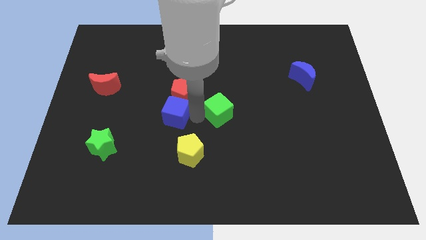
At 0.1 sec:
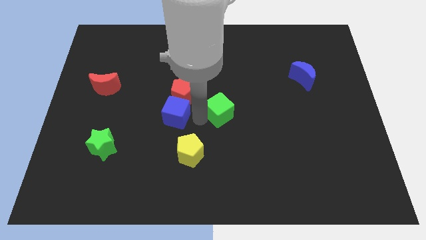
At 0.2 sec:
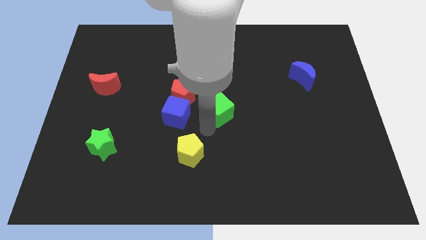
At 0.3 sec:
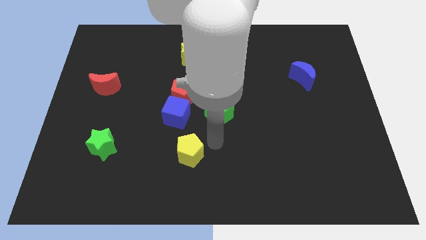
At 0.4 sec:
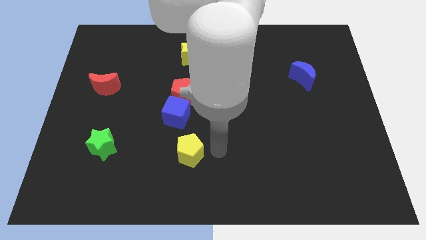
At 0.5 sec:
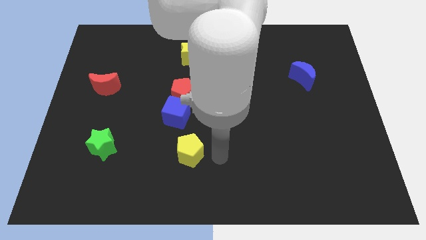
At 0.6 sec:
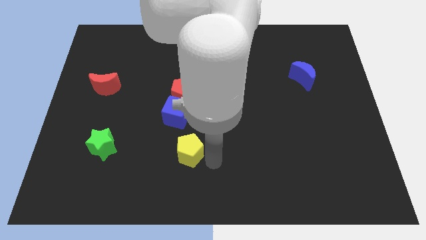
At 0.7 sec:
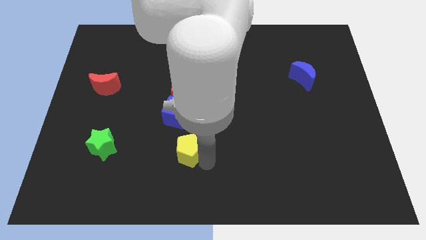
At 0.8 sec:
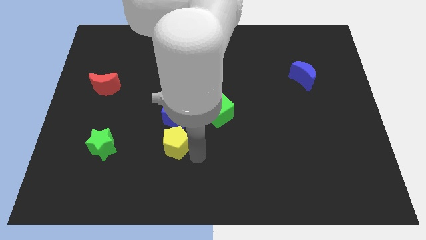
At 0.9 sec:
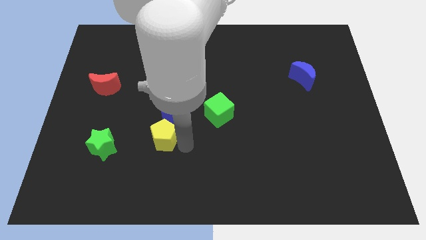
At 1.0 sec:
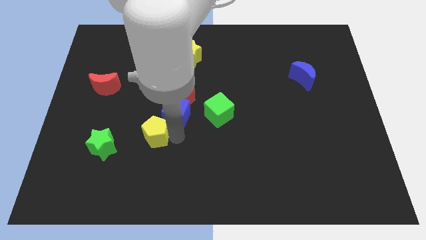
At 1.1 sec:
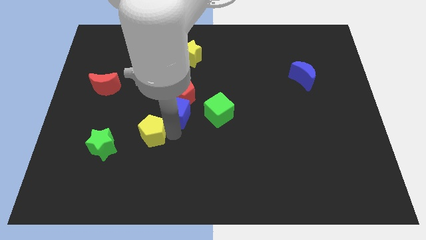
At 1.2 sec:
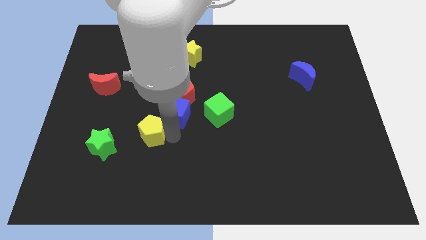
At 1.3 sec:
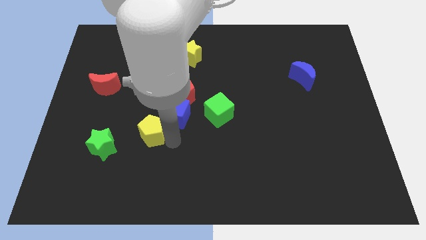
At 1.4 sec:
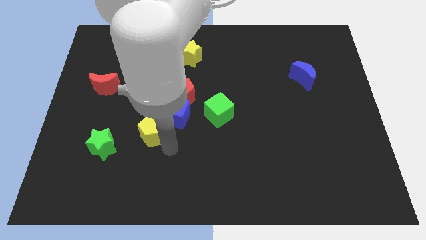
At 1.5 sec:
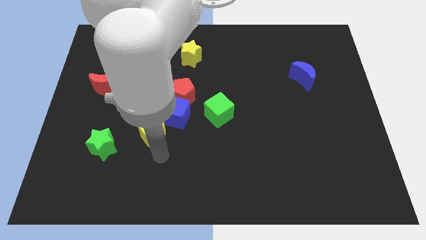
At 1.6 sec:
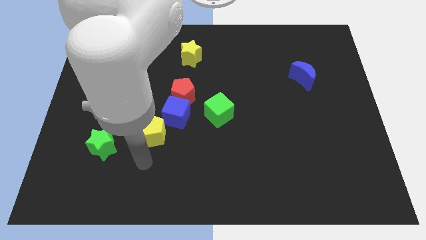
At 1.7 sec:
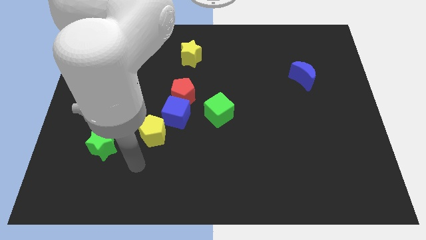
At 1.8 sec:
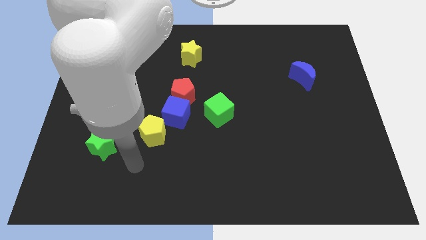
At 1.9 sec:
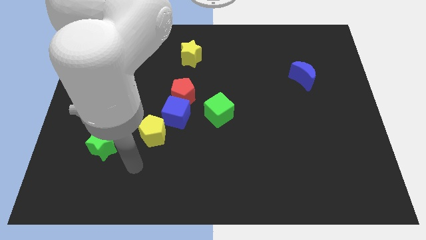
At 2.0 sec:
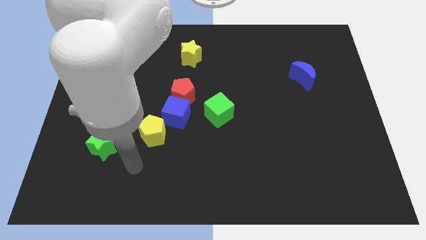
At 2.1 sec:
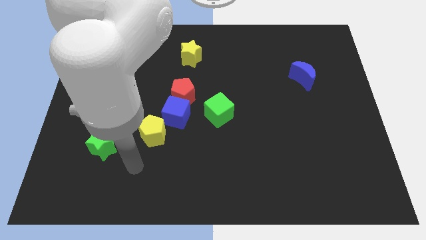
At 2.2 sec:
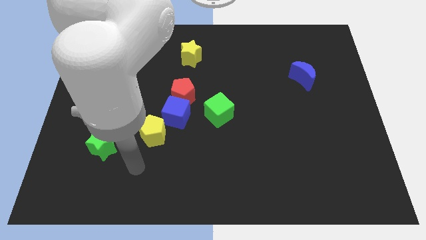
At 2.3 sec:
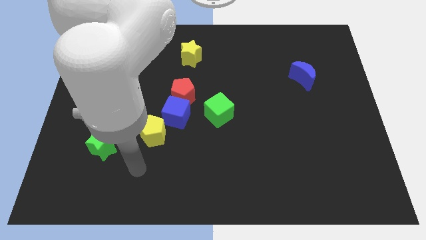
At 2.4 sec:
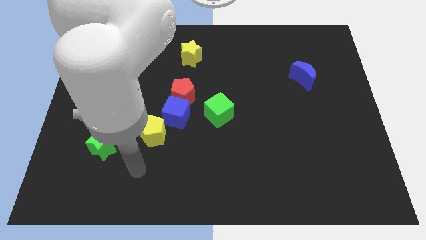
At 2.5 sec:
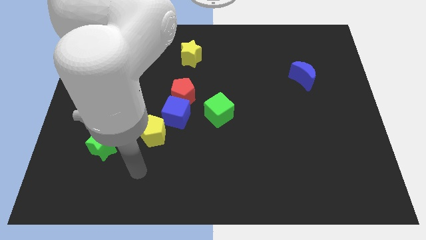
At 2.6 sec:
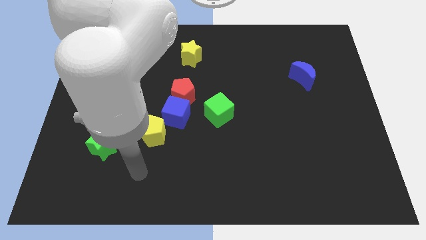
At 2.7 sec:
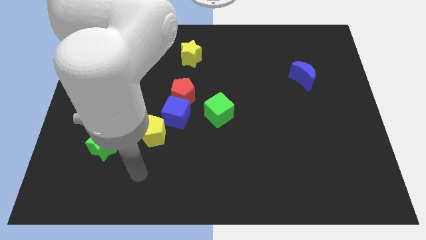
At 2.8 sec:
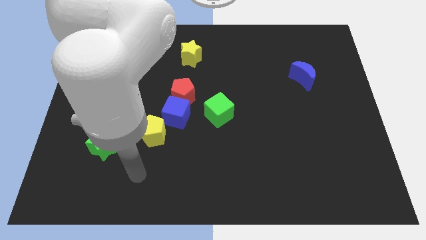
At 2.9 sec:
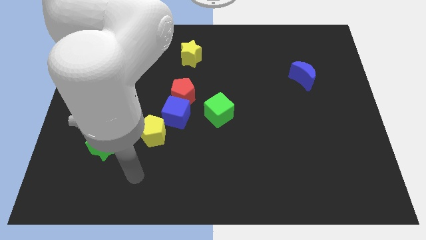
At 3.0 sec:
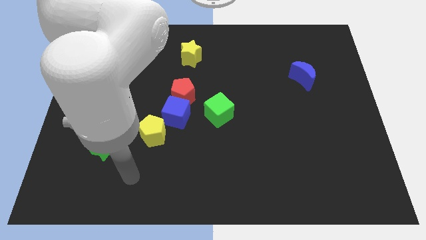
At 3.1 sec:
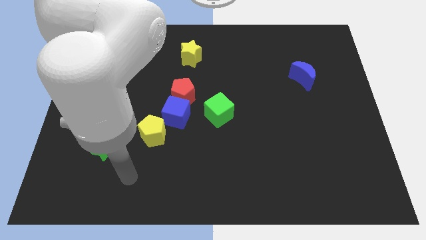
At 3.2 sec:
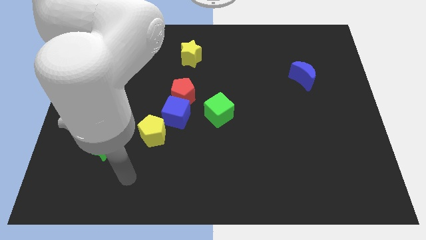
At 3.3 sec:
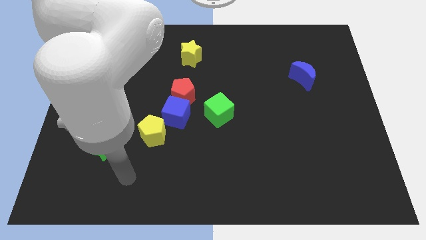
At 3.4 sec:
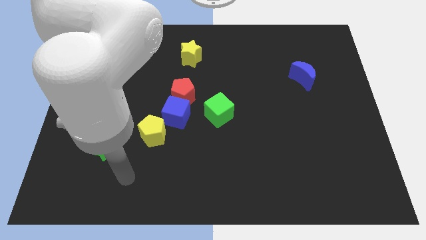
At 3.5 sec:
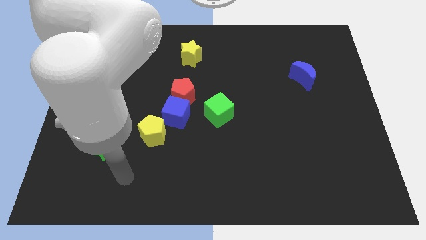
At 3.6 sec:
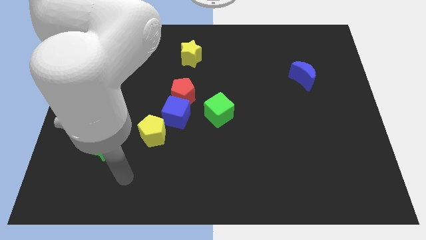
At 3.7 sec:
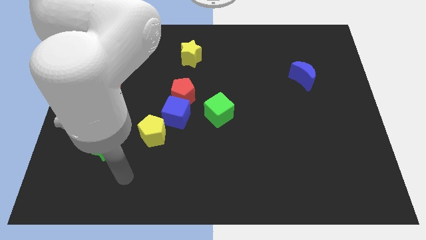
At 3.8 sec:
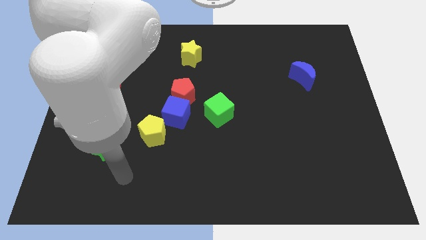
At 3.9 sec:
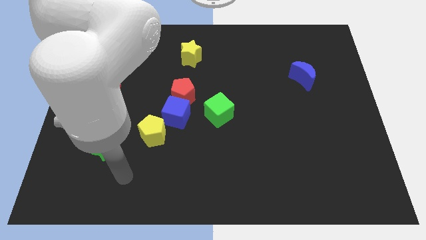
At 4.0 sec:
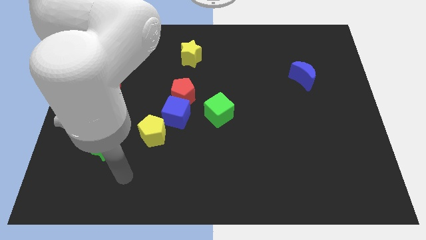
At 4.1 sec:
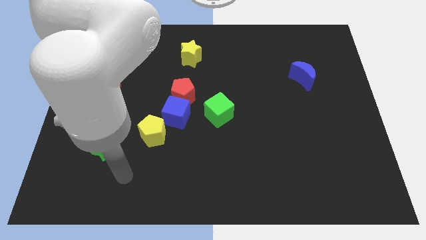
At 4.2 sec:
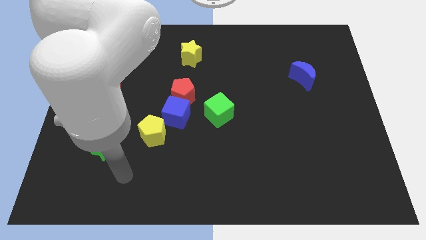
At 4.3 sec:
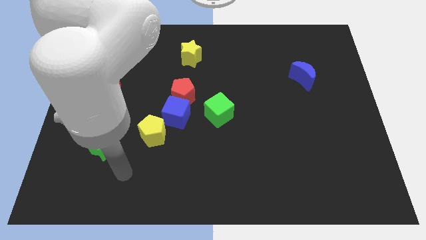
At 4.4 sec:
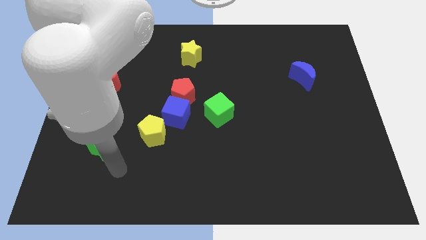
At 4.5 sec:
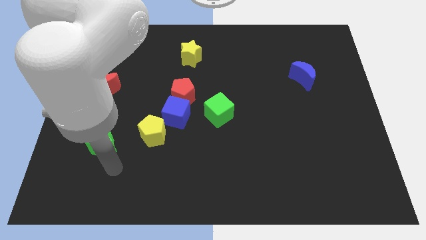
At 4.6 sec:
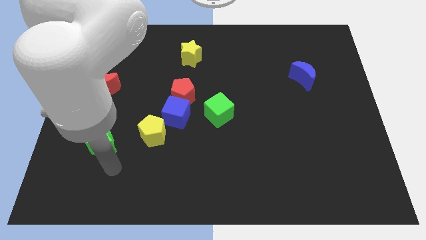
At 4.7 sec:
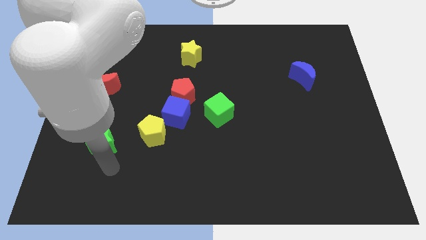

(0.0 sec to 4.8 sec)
place the yellow pentagon to the bottom left of the blue cube

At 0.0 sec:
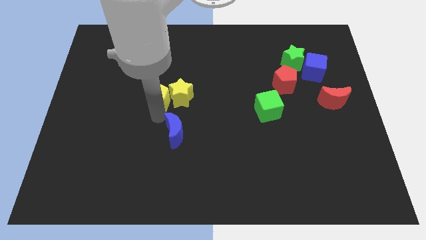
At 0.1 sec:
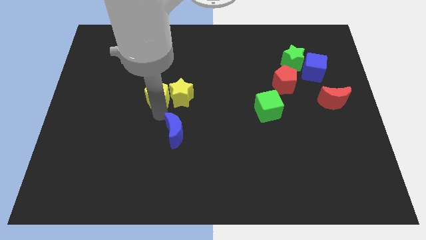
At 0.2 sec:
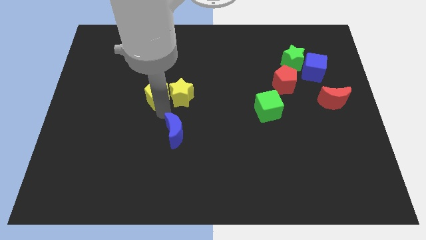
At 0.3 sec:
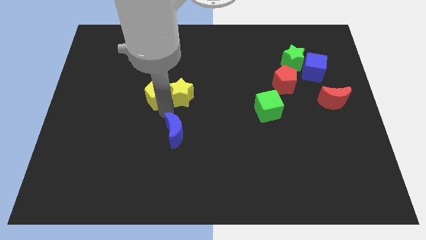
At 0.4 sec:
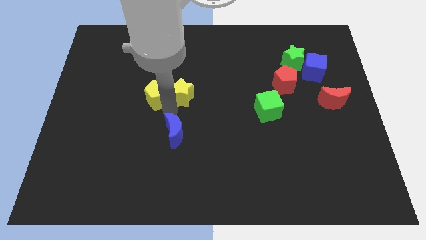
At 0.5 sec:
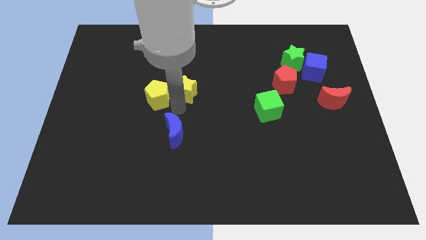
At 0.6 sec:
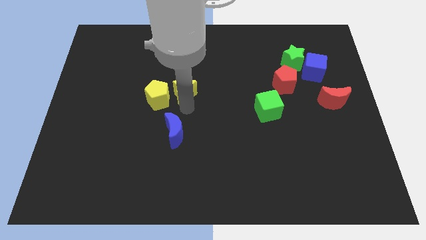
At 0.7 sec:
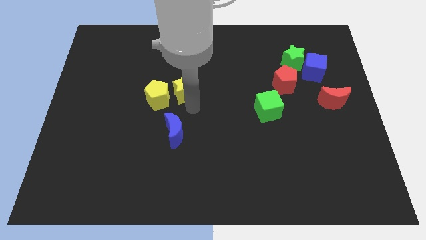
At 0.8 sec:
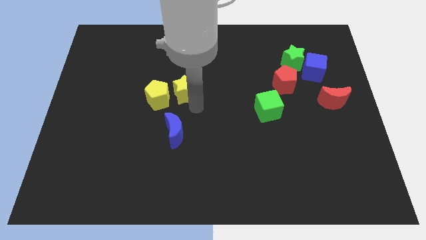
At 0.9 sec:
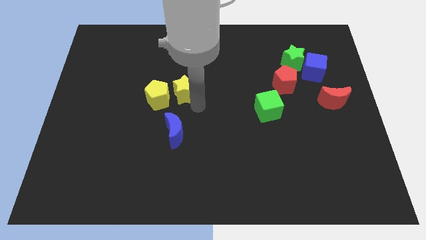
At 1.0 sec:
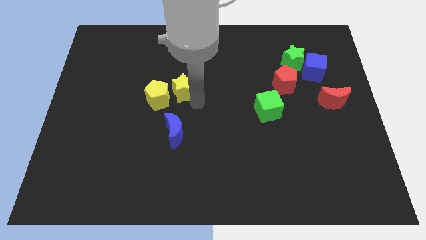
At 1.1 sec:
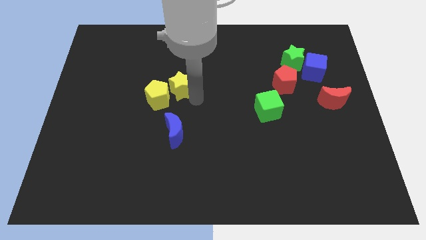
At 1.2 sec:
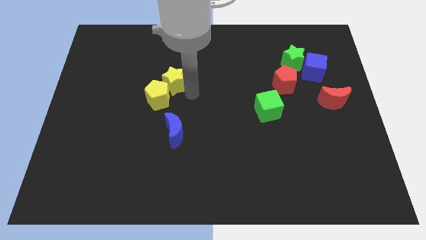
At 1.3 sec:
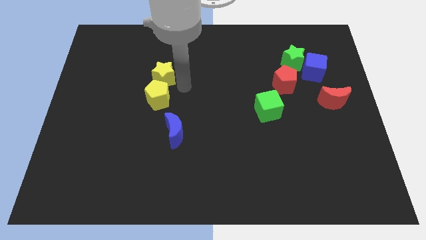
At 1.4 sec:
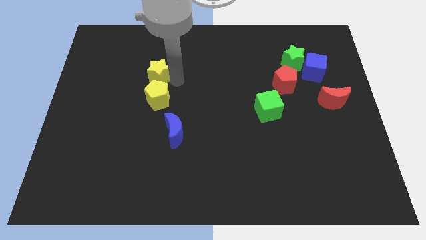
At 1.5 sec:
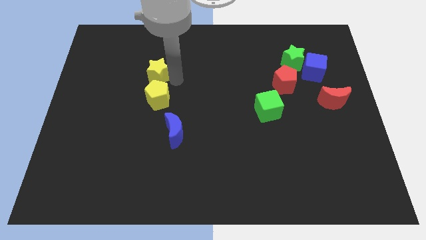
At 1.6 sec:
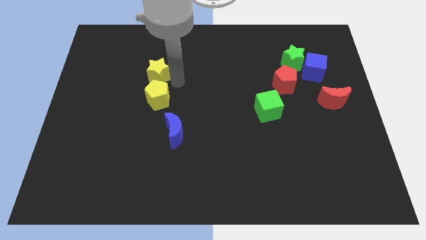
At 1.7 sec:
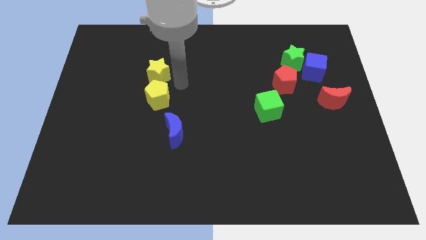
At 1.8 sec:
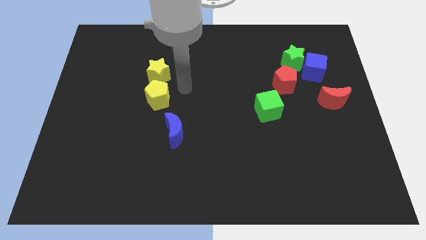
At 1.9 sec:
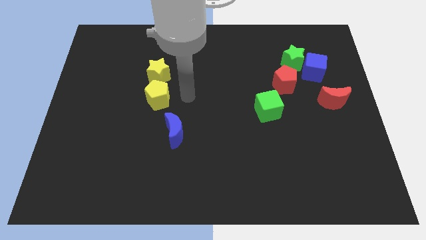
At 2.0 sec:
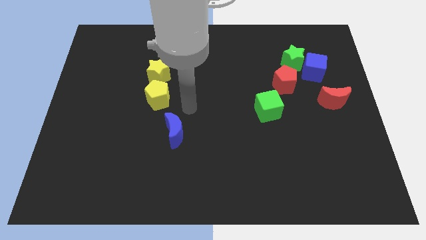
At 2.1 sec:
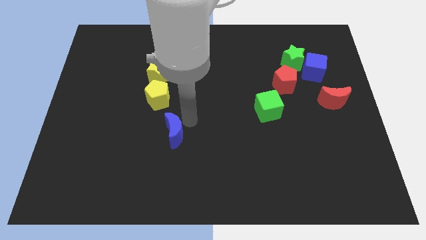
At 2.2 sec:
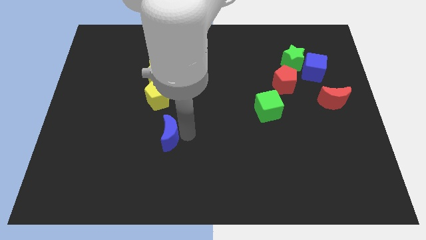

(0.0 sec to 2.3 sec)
separate the yellow pentagon and yellow star

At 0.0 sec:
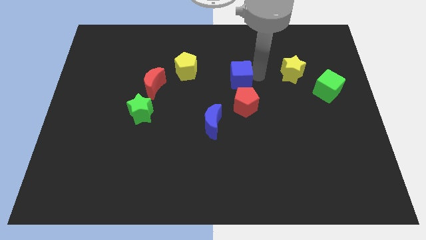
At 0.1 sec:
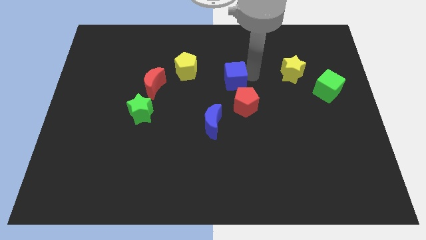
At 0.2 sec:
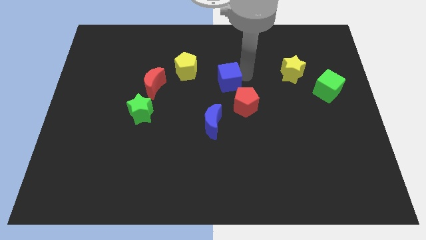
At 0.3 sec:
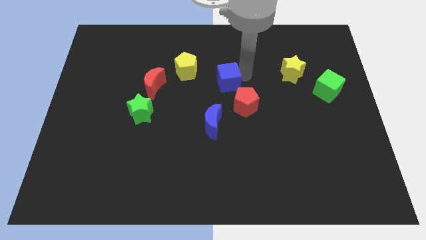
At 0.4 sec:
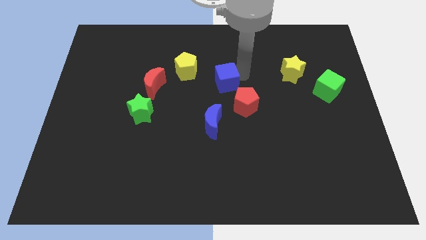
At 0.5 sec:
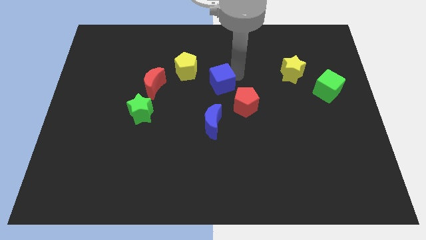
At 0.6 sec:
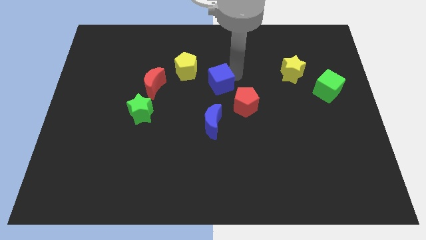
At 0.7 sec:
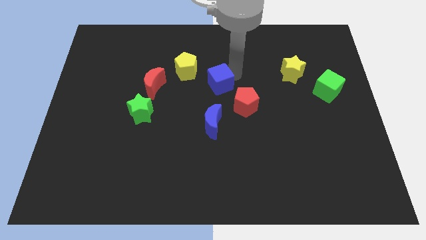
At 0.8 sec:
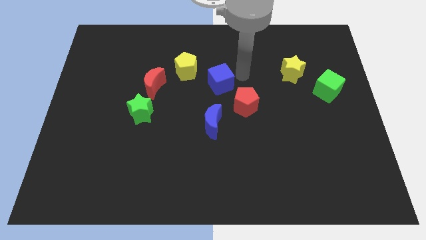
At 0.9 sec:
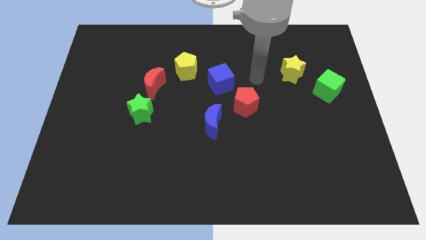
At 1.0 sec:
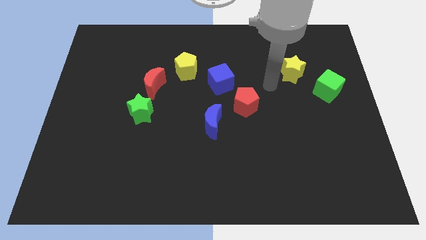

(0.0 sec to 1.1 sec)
move the blue cube to the top of the blue crescent

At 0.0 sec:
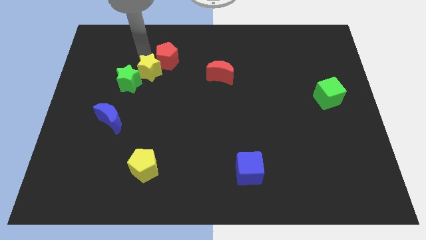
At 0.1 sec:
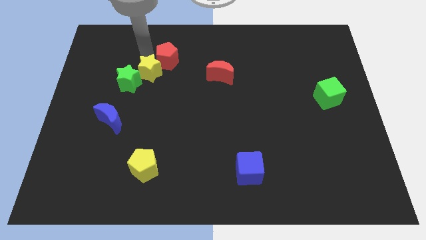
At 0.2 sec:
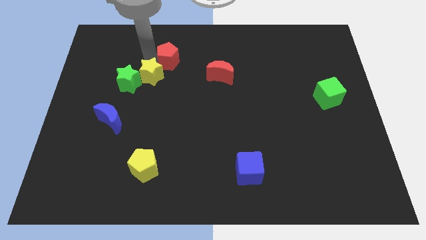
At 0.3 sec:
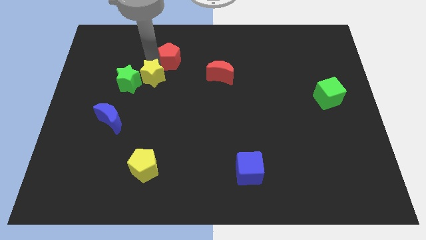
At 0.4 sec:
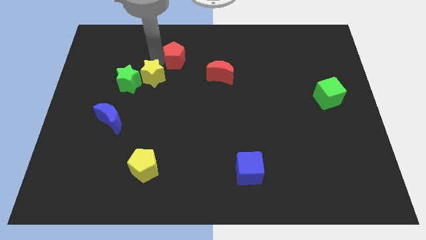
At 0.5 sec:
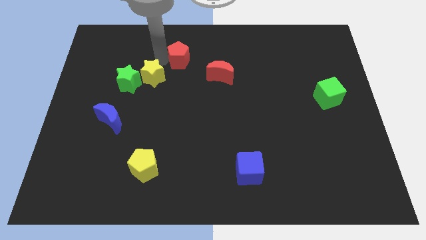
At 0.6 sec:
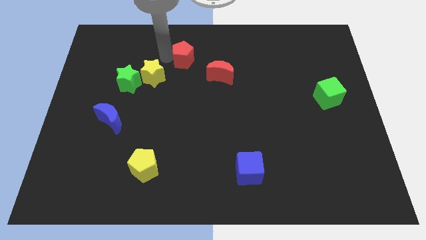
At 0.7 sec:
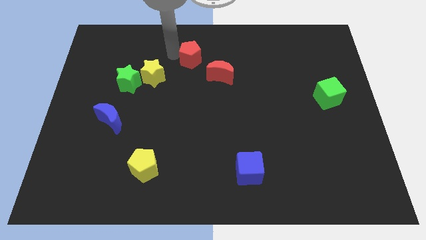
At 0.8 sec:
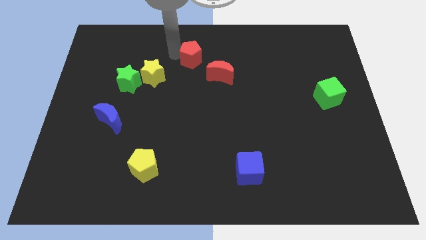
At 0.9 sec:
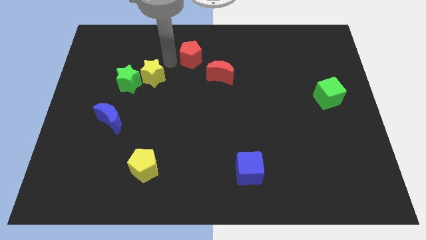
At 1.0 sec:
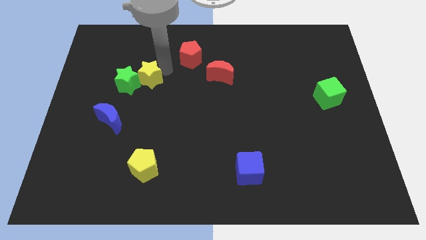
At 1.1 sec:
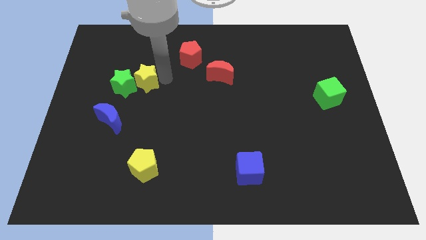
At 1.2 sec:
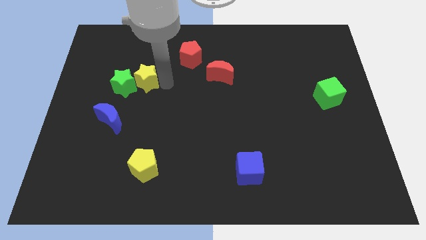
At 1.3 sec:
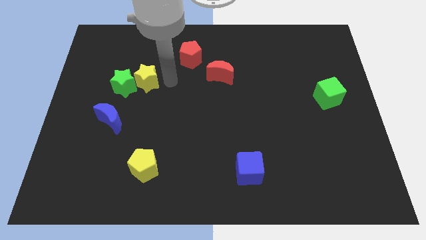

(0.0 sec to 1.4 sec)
separate the red pentagon from the yellow star
